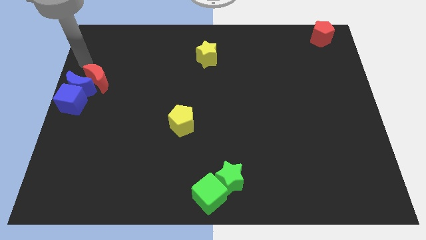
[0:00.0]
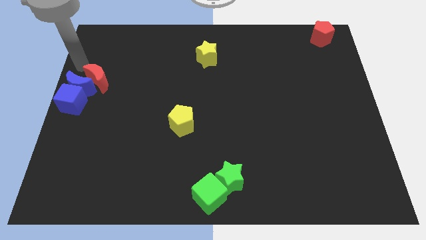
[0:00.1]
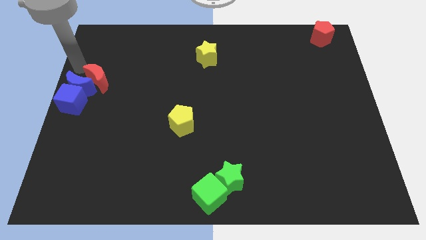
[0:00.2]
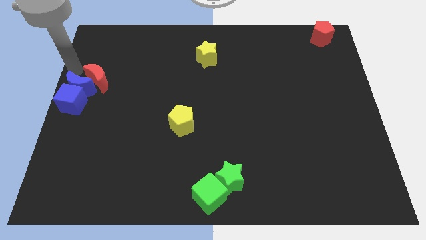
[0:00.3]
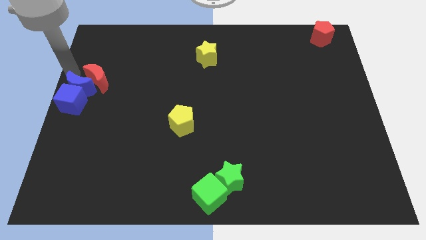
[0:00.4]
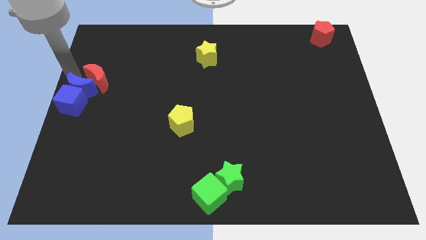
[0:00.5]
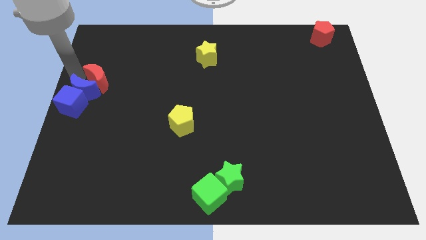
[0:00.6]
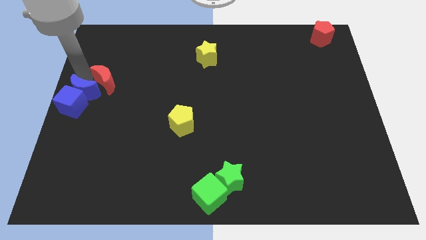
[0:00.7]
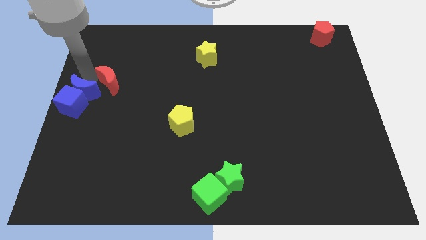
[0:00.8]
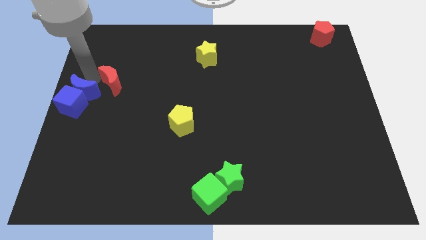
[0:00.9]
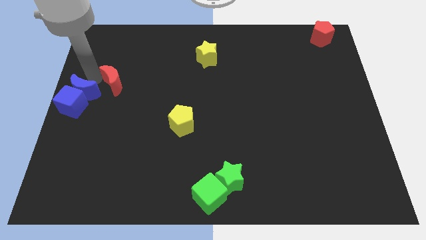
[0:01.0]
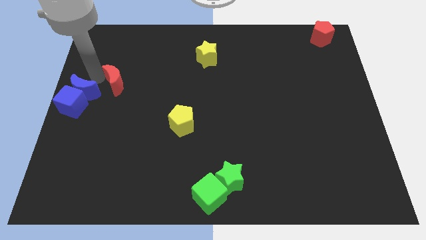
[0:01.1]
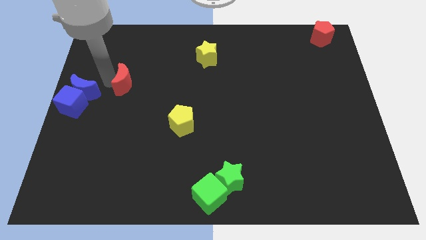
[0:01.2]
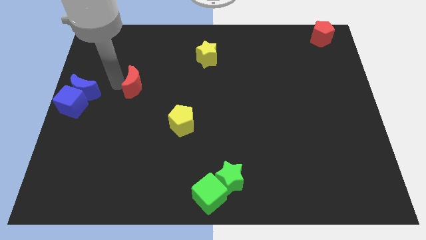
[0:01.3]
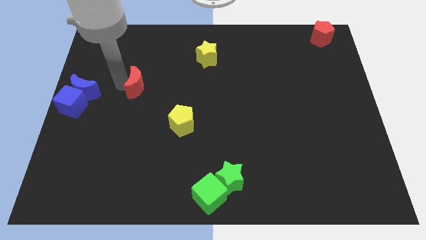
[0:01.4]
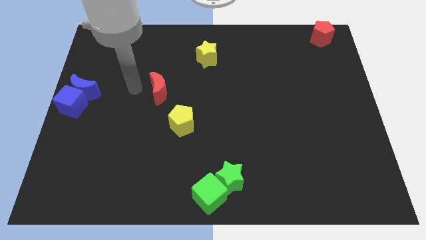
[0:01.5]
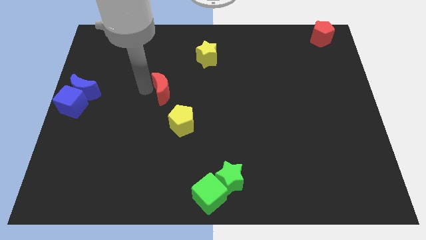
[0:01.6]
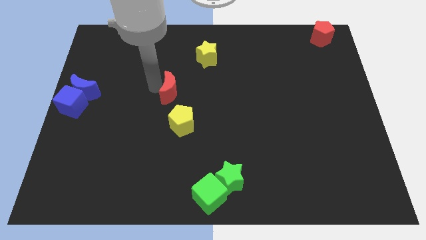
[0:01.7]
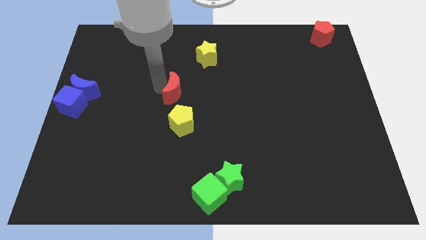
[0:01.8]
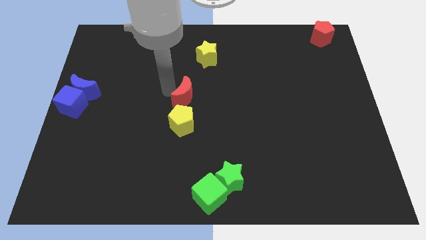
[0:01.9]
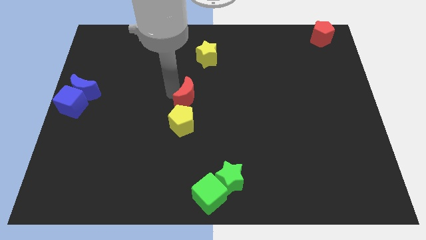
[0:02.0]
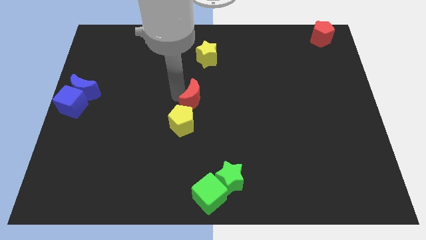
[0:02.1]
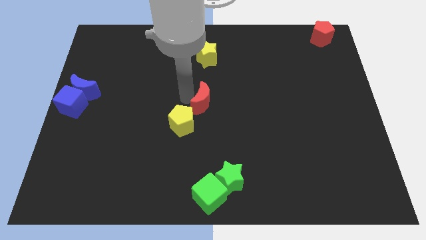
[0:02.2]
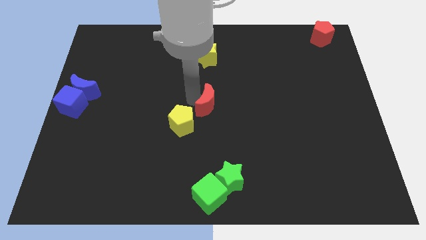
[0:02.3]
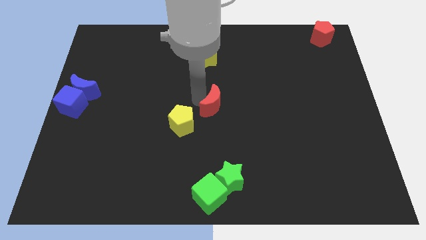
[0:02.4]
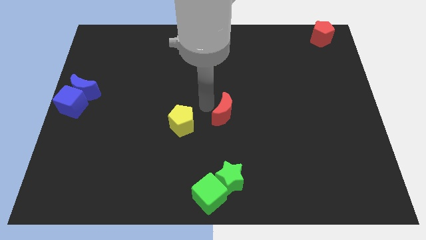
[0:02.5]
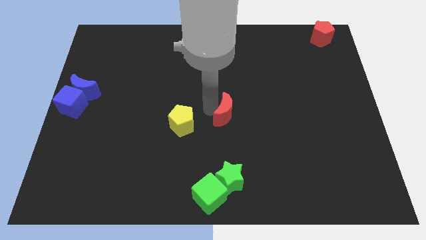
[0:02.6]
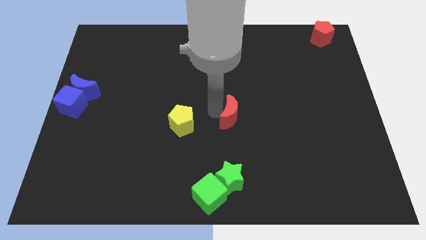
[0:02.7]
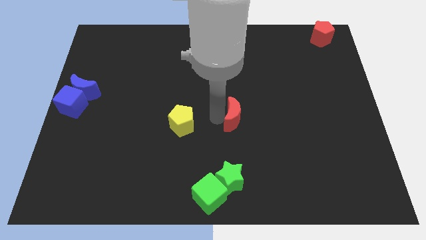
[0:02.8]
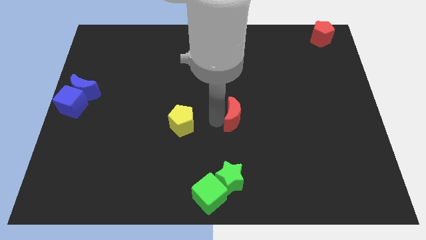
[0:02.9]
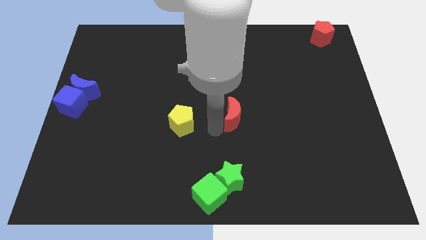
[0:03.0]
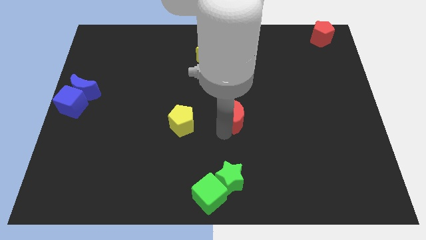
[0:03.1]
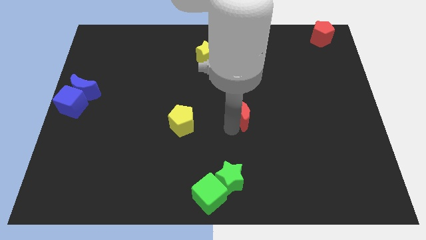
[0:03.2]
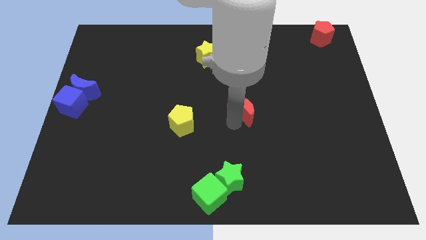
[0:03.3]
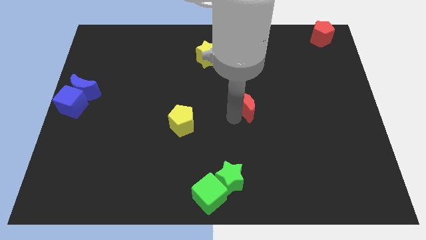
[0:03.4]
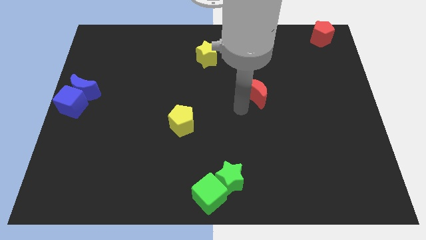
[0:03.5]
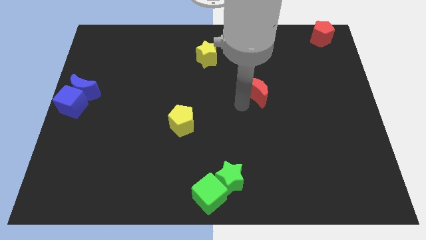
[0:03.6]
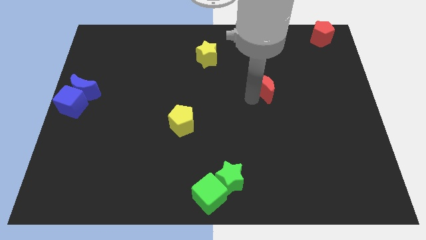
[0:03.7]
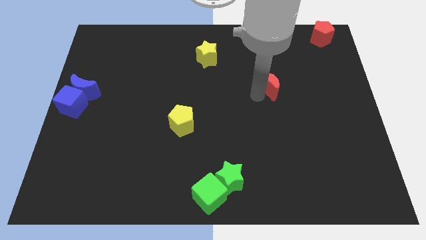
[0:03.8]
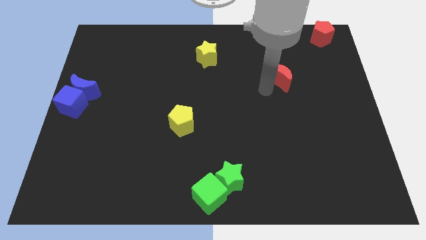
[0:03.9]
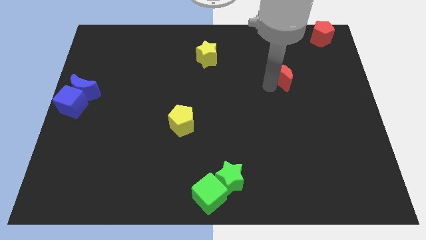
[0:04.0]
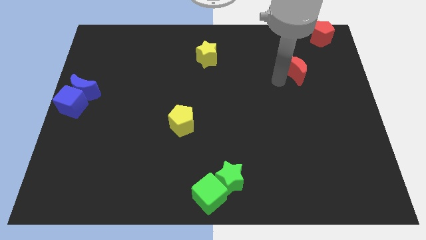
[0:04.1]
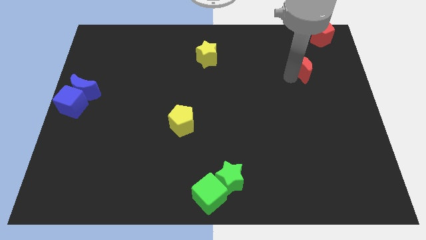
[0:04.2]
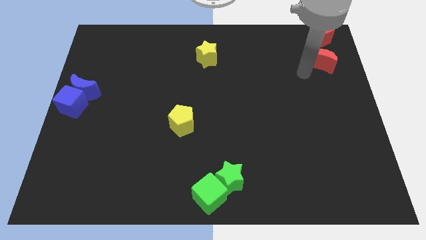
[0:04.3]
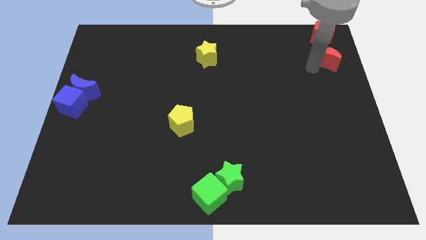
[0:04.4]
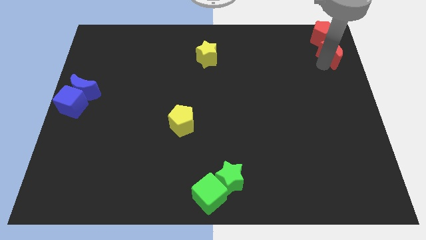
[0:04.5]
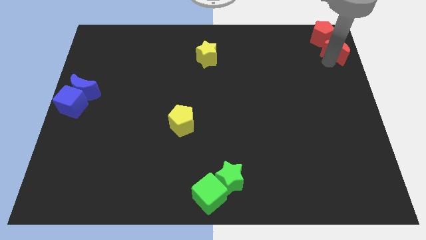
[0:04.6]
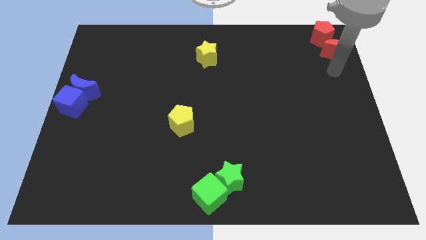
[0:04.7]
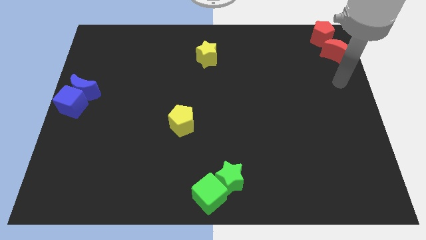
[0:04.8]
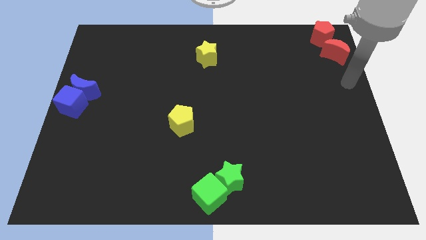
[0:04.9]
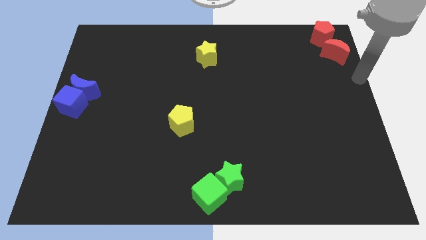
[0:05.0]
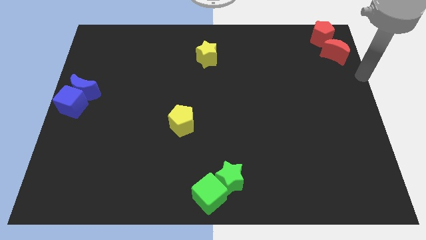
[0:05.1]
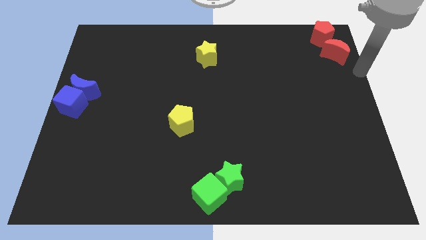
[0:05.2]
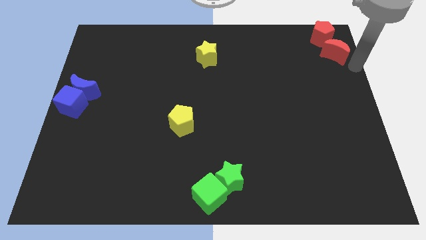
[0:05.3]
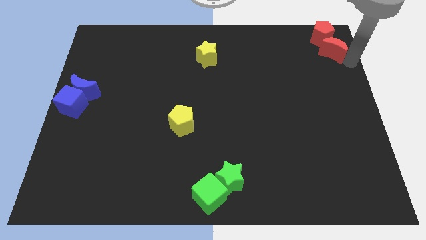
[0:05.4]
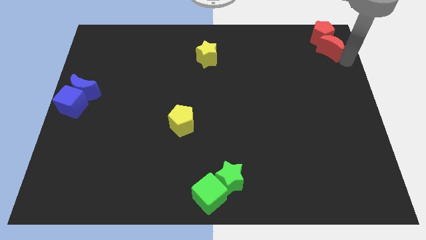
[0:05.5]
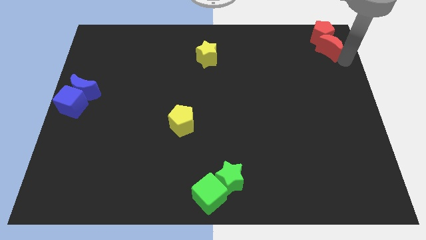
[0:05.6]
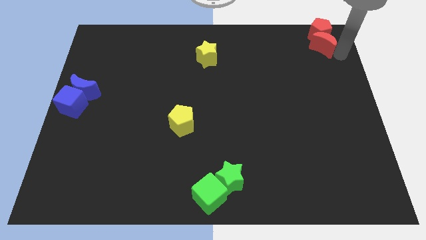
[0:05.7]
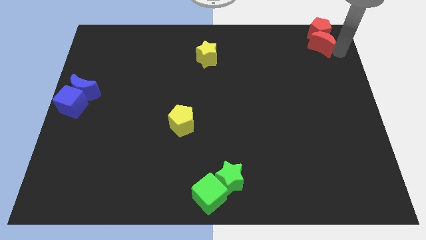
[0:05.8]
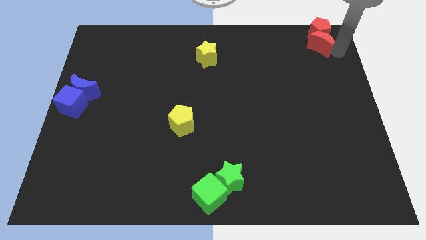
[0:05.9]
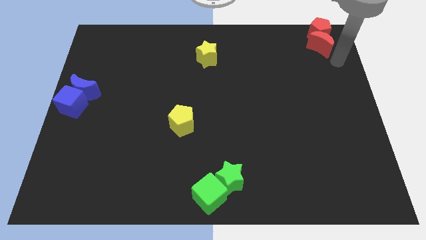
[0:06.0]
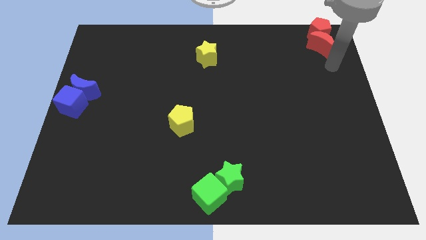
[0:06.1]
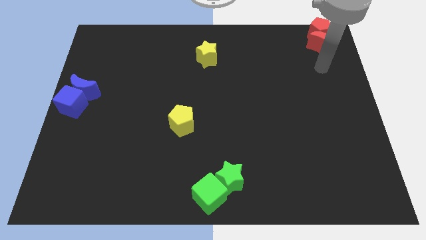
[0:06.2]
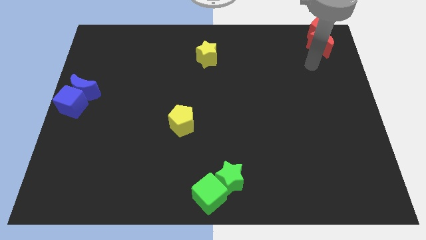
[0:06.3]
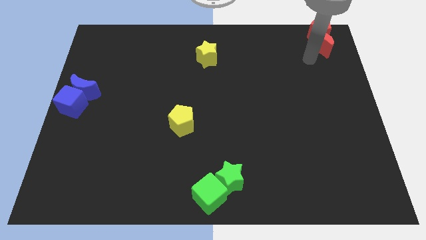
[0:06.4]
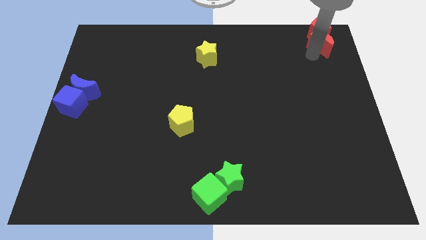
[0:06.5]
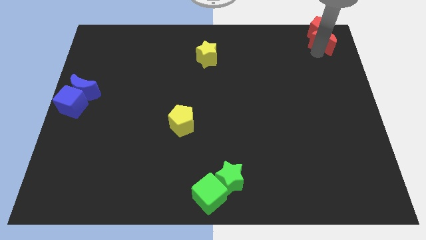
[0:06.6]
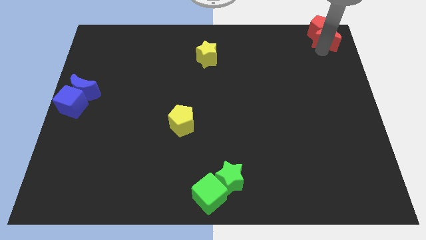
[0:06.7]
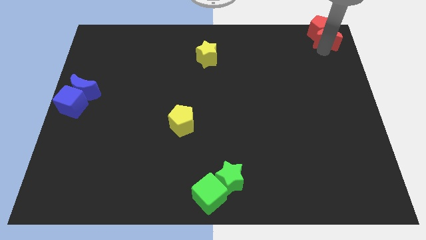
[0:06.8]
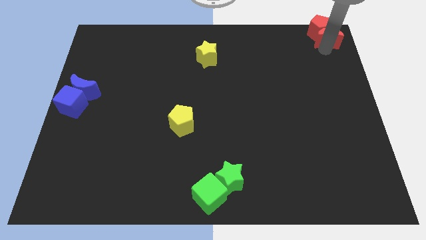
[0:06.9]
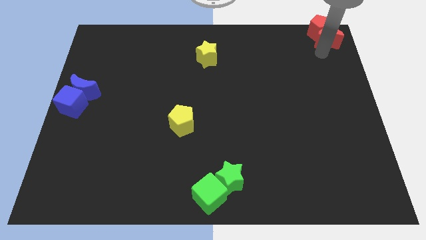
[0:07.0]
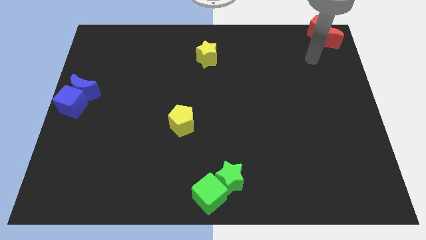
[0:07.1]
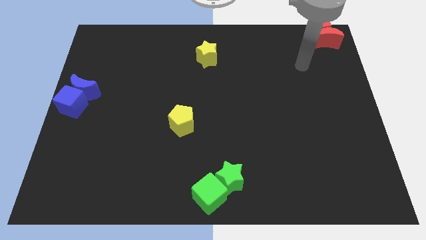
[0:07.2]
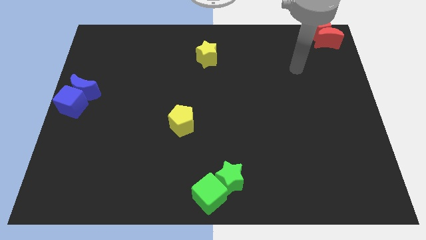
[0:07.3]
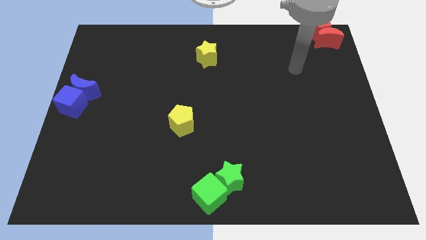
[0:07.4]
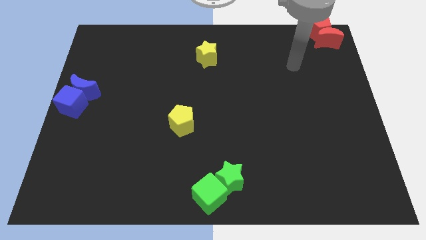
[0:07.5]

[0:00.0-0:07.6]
move the red crescent to the bottom of the red pentagon

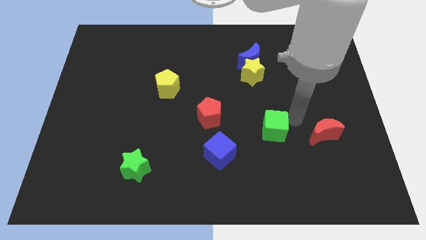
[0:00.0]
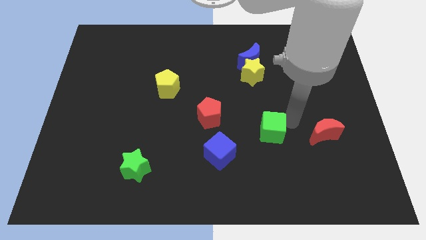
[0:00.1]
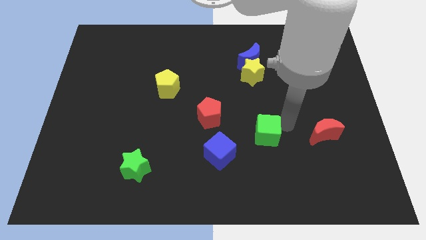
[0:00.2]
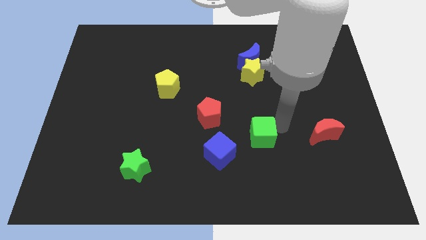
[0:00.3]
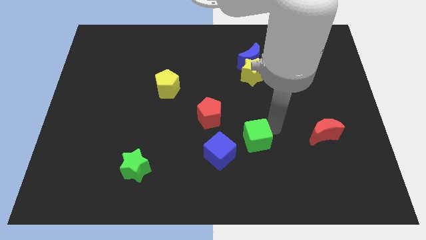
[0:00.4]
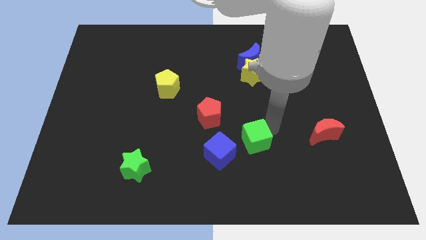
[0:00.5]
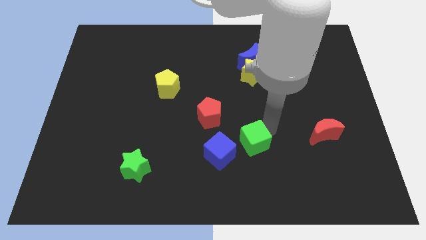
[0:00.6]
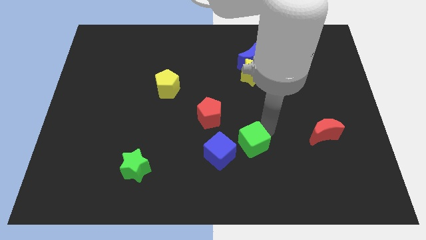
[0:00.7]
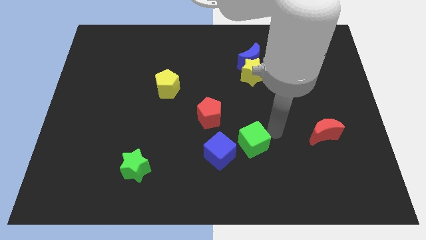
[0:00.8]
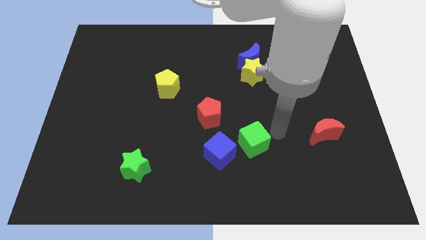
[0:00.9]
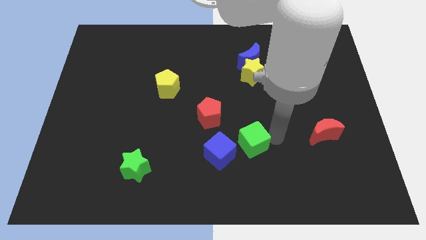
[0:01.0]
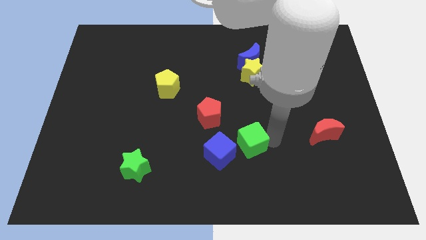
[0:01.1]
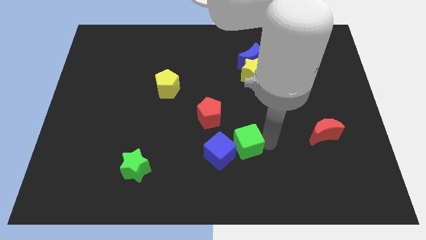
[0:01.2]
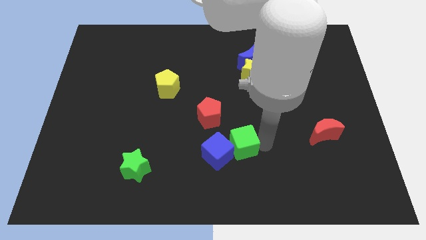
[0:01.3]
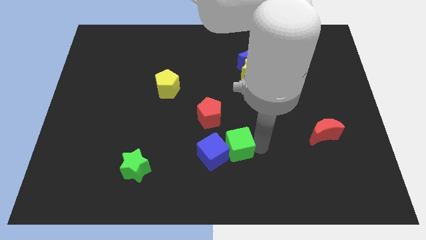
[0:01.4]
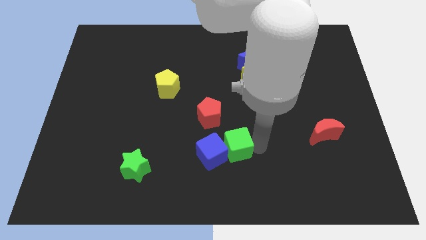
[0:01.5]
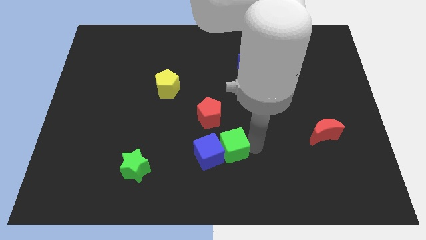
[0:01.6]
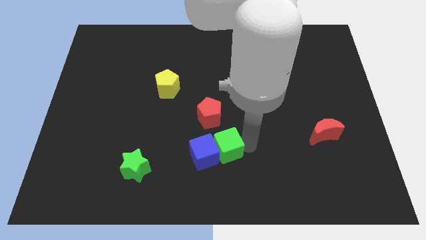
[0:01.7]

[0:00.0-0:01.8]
move green cube into blue cube
